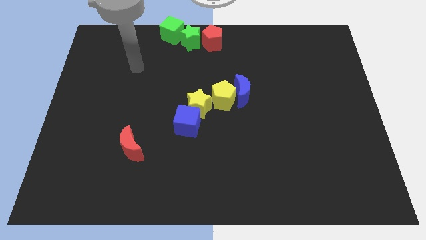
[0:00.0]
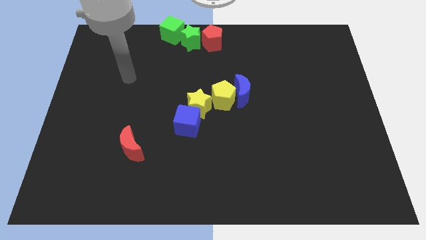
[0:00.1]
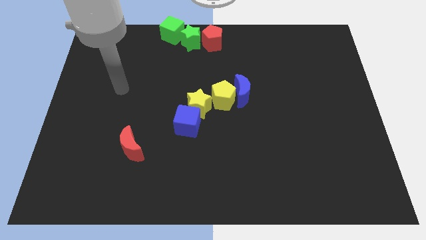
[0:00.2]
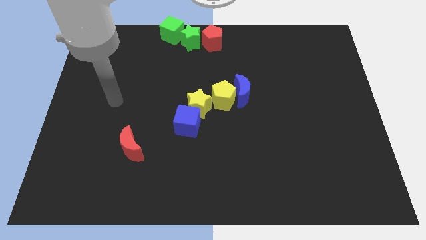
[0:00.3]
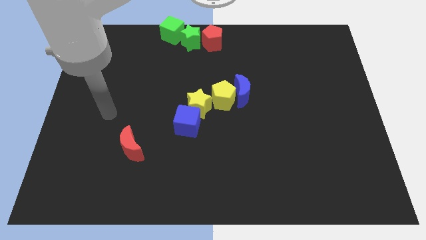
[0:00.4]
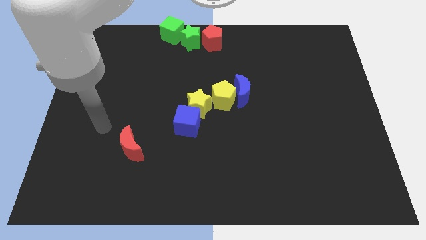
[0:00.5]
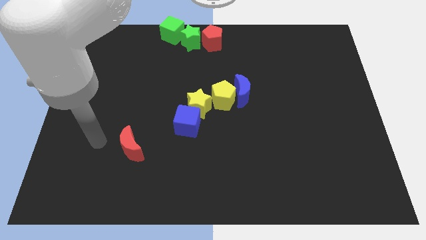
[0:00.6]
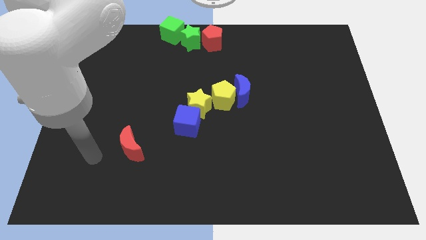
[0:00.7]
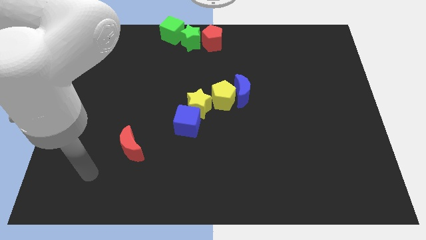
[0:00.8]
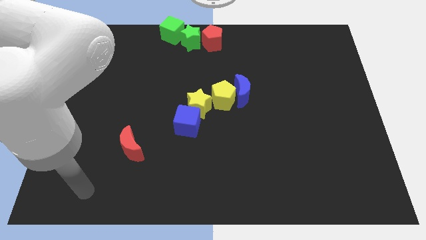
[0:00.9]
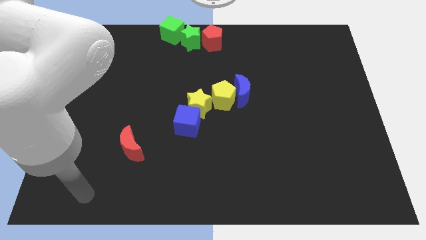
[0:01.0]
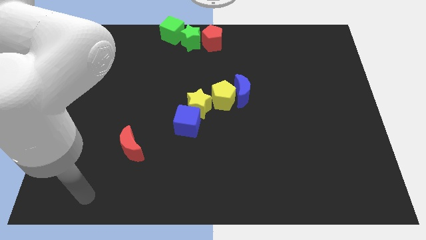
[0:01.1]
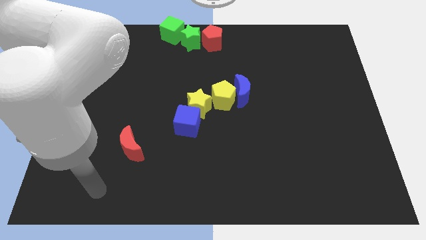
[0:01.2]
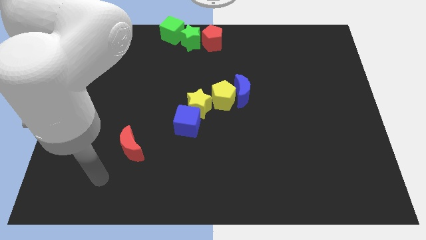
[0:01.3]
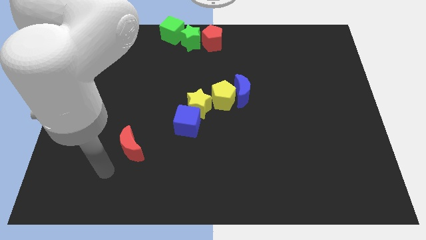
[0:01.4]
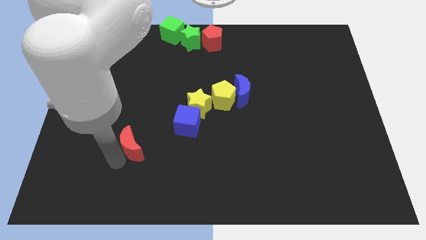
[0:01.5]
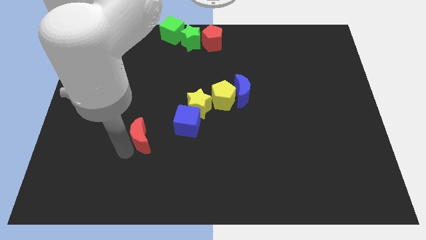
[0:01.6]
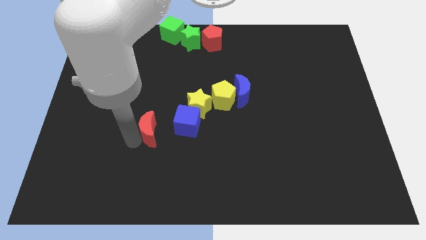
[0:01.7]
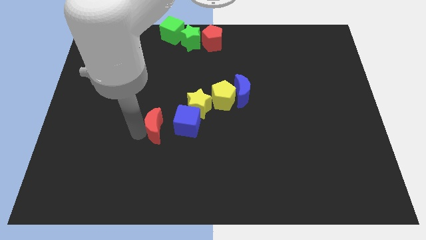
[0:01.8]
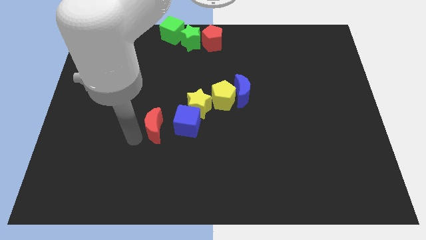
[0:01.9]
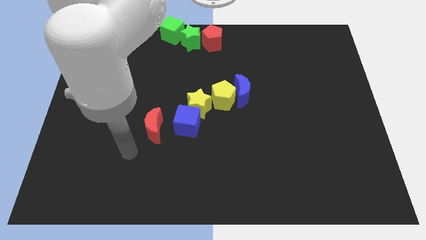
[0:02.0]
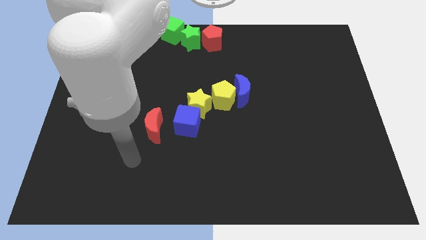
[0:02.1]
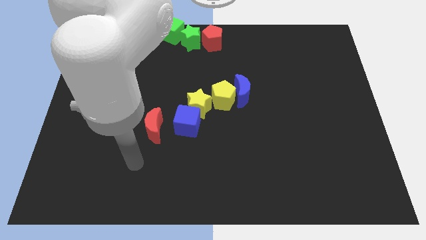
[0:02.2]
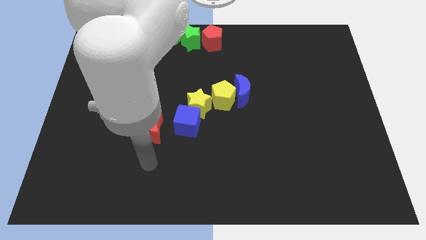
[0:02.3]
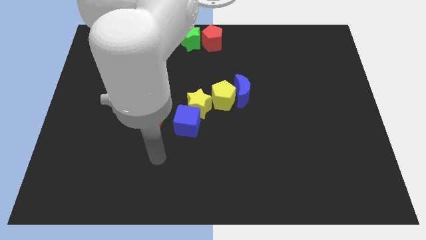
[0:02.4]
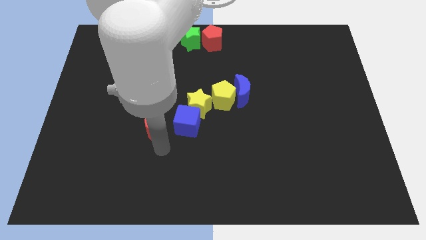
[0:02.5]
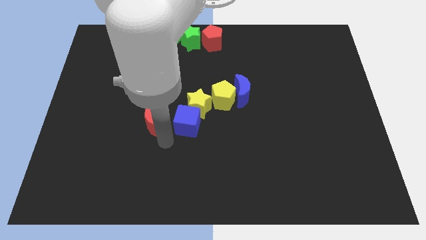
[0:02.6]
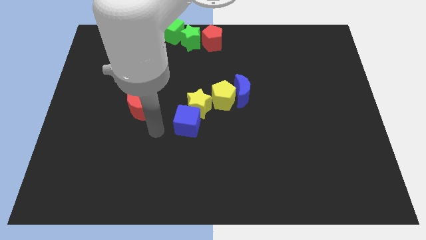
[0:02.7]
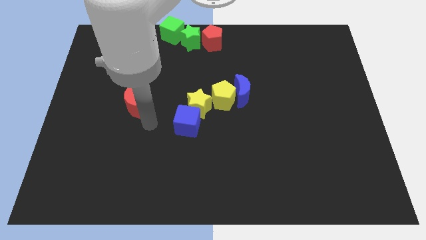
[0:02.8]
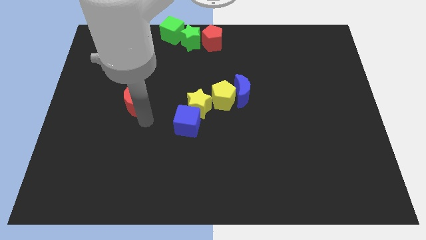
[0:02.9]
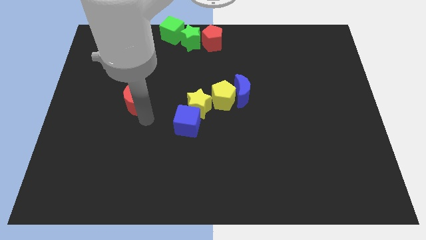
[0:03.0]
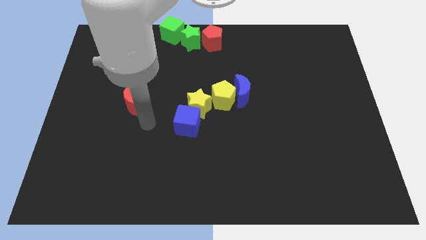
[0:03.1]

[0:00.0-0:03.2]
move the red moon to the top side

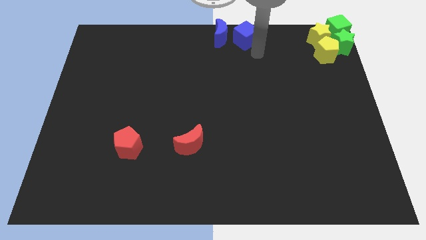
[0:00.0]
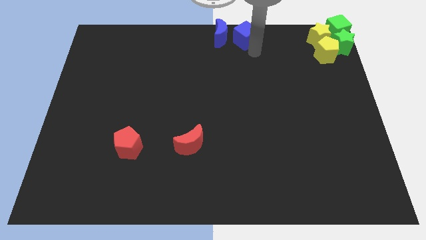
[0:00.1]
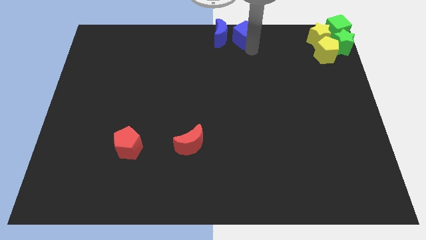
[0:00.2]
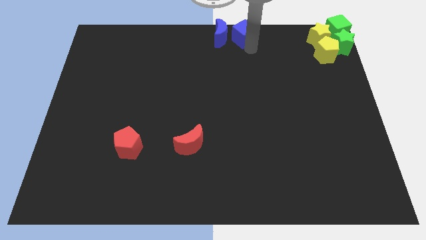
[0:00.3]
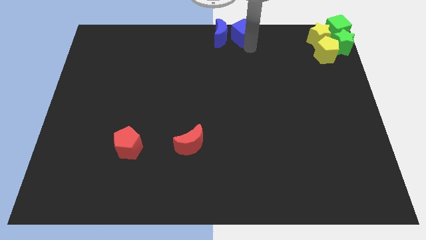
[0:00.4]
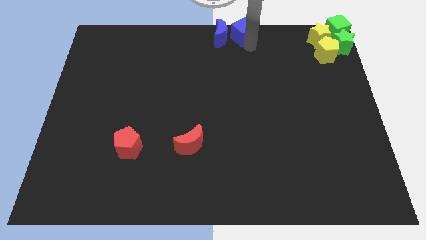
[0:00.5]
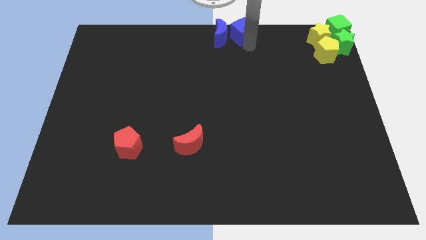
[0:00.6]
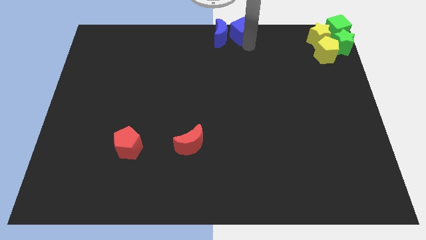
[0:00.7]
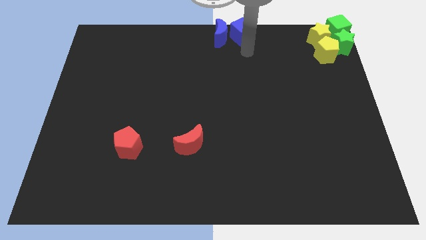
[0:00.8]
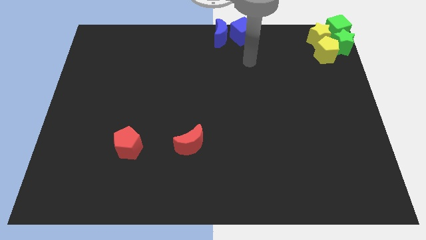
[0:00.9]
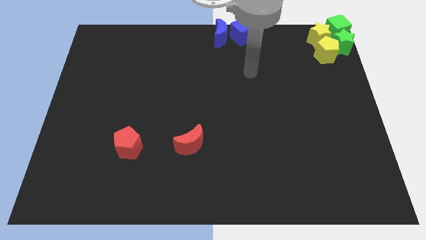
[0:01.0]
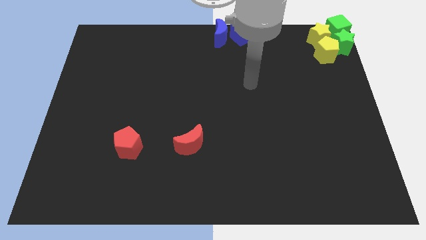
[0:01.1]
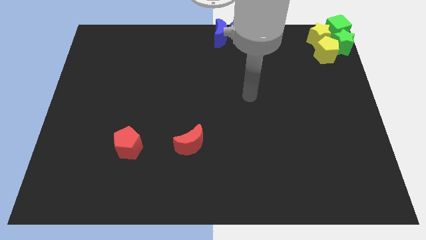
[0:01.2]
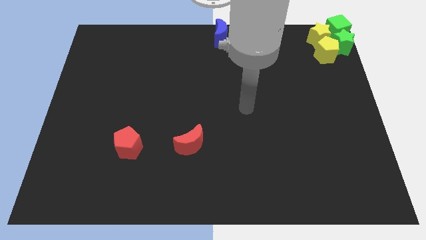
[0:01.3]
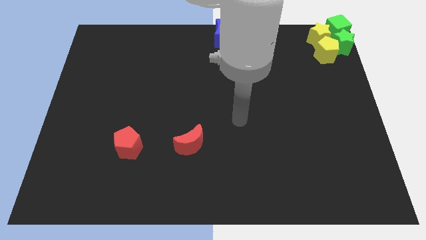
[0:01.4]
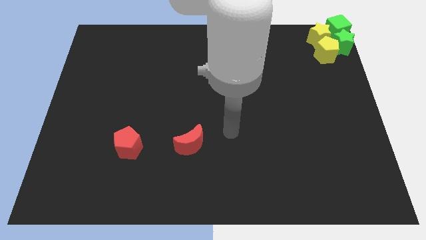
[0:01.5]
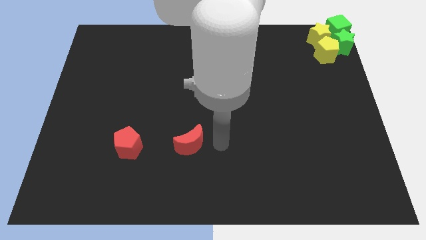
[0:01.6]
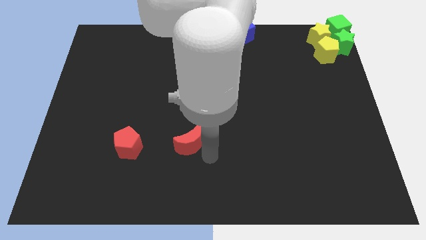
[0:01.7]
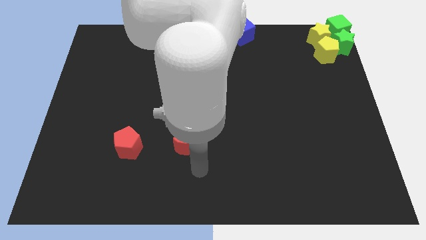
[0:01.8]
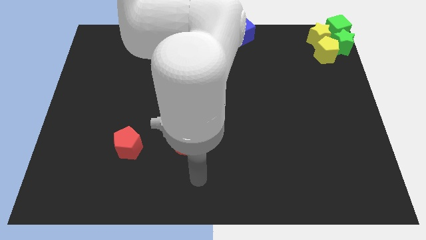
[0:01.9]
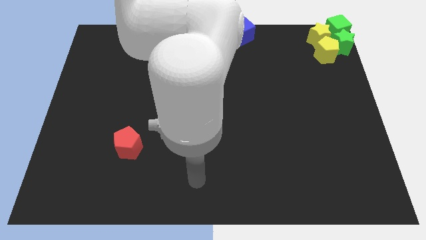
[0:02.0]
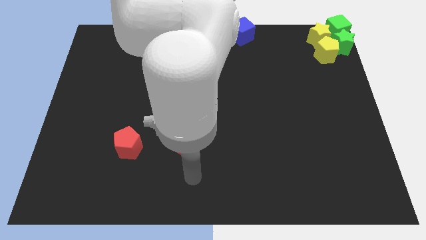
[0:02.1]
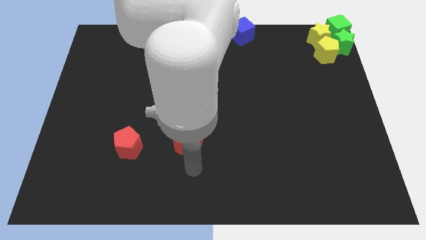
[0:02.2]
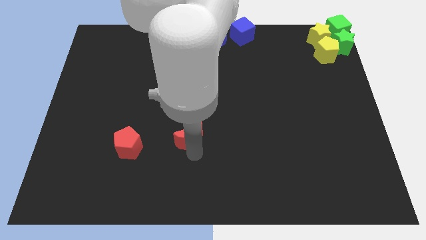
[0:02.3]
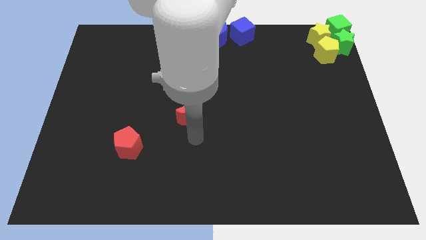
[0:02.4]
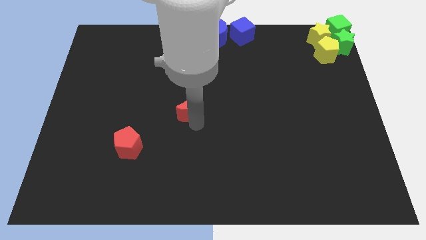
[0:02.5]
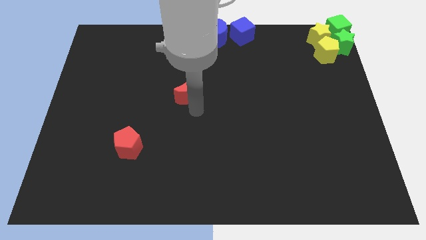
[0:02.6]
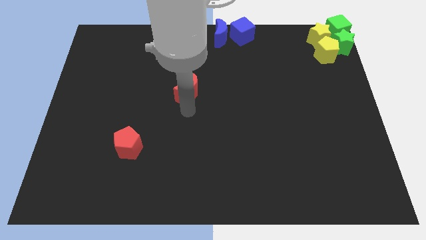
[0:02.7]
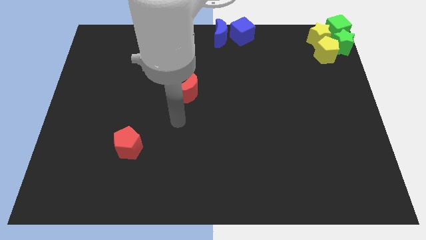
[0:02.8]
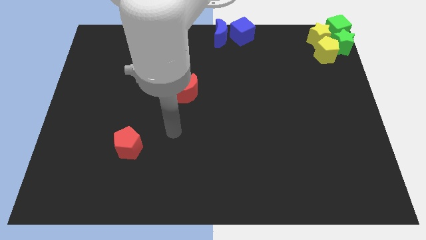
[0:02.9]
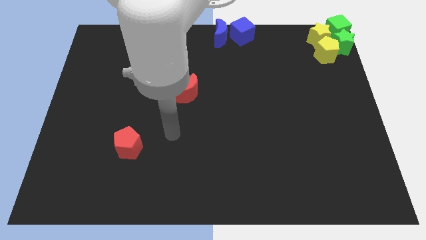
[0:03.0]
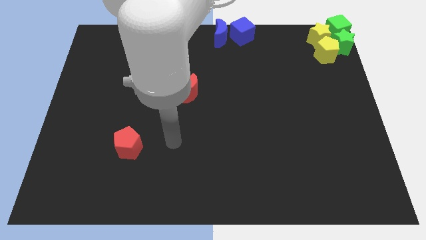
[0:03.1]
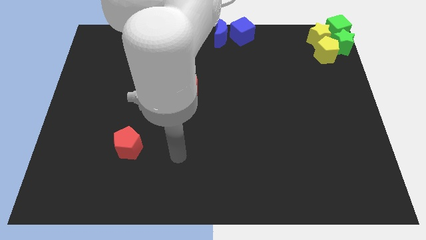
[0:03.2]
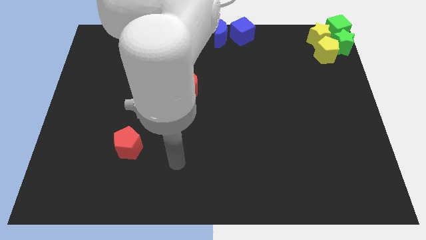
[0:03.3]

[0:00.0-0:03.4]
move the red moon diagonally to the top right of the red pentagon

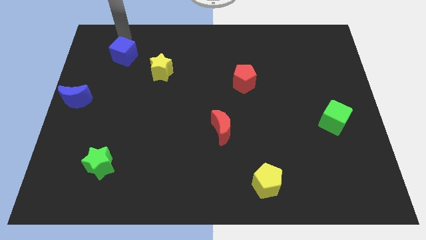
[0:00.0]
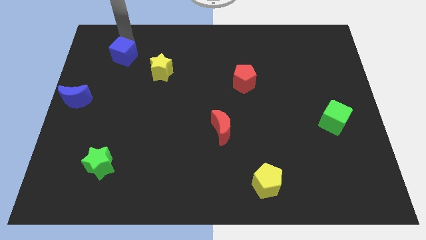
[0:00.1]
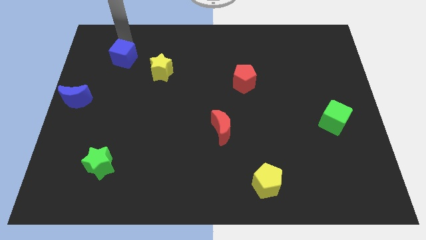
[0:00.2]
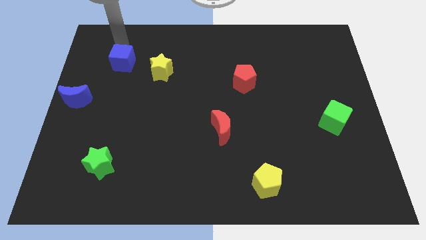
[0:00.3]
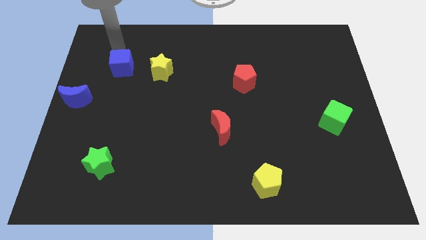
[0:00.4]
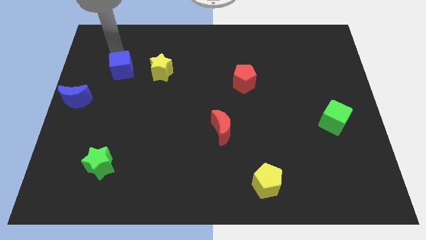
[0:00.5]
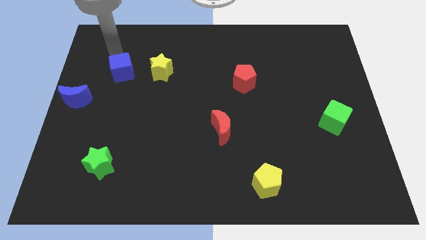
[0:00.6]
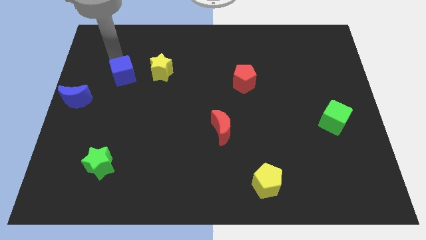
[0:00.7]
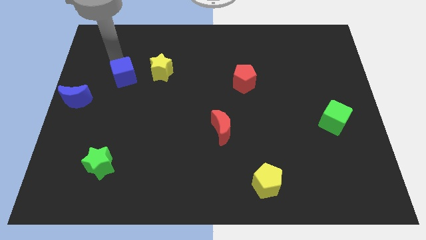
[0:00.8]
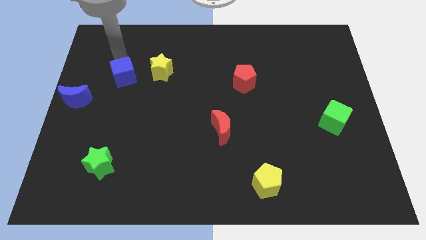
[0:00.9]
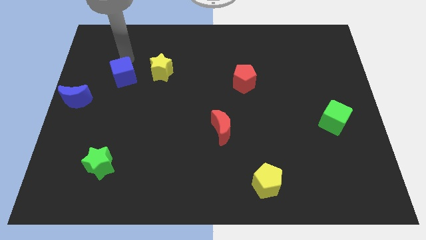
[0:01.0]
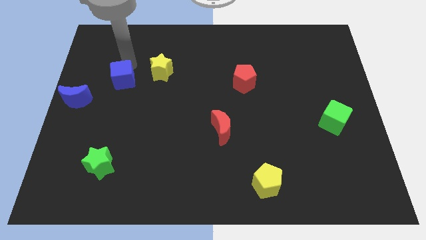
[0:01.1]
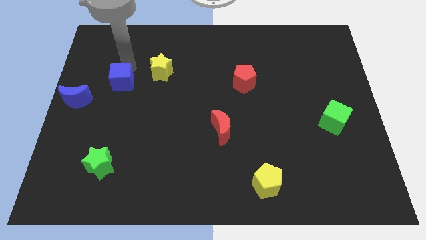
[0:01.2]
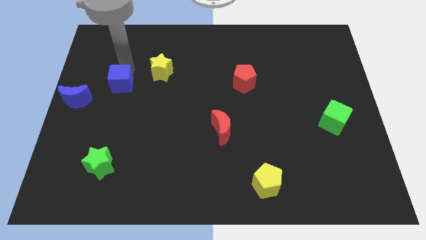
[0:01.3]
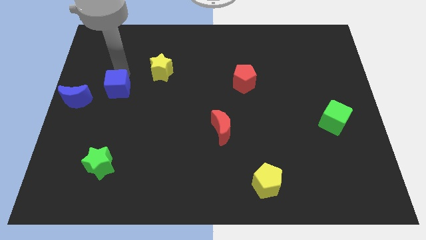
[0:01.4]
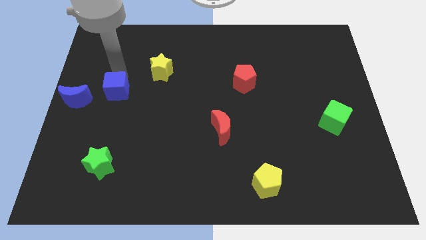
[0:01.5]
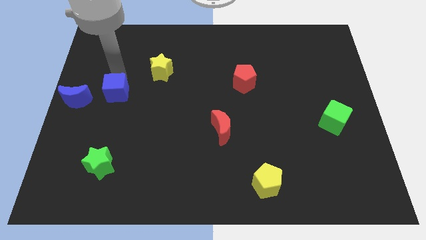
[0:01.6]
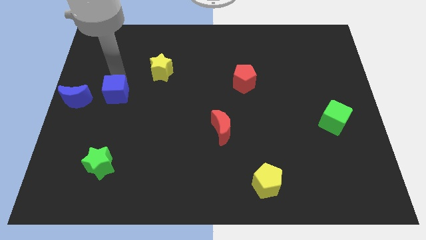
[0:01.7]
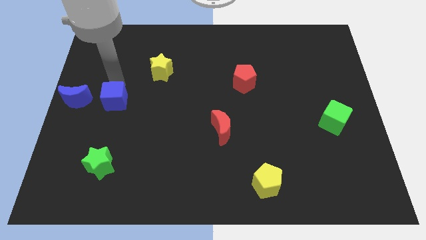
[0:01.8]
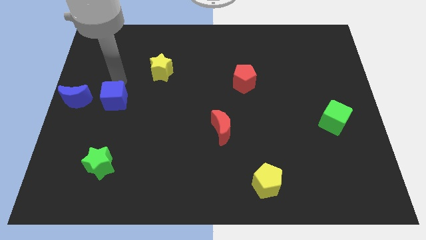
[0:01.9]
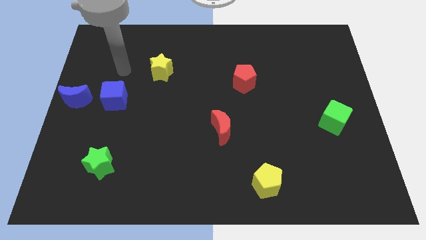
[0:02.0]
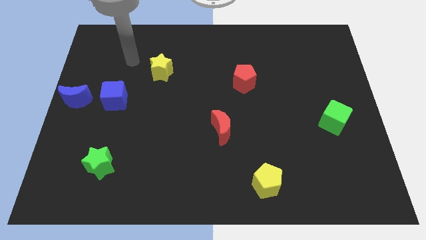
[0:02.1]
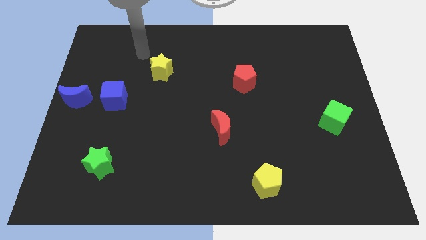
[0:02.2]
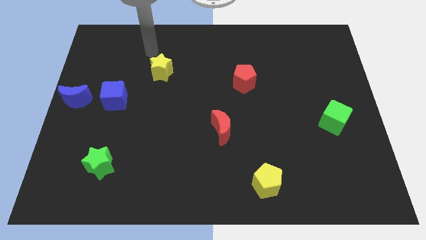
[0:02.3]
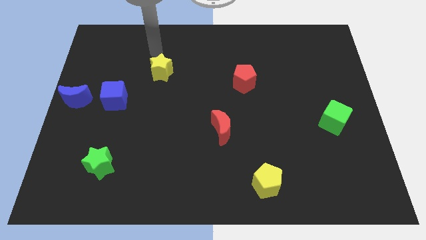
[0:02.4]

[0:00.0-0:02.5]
place the blue cube right to the blue crescent
